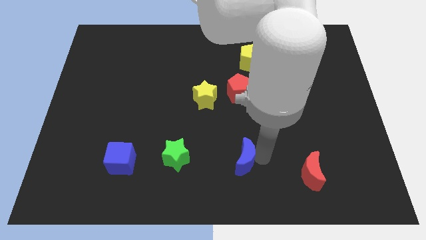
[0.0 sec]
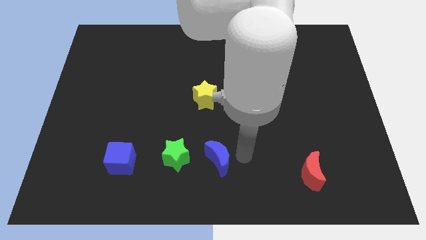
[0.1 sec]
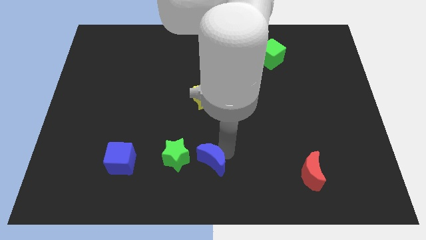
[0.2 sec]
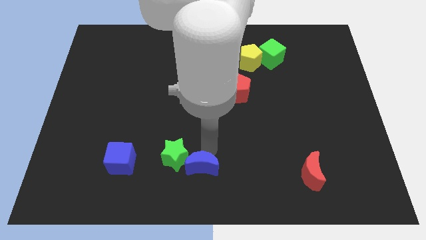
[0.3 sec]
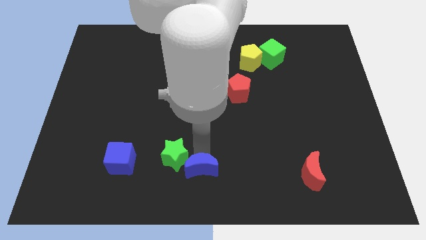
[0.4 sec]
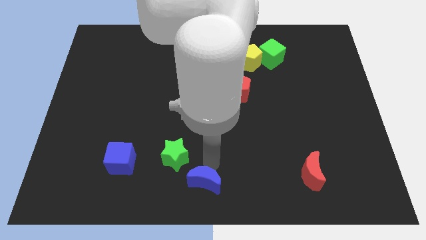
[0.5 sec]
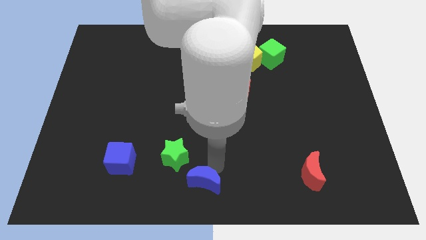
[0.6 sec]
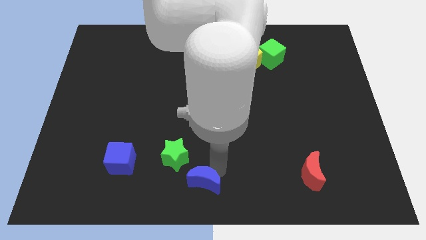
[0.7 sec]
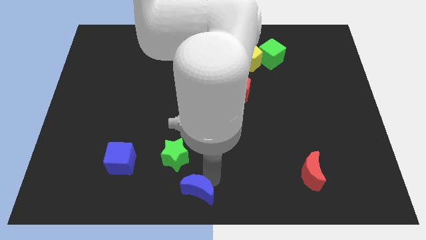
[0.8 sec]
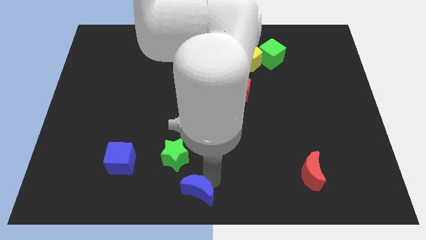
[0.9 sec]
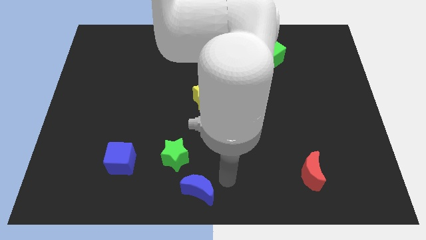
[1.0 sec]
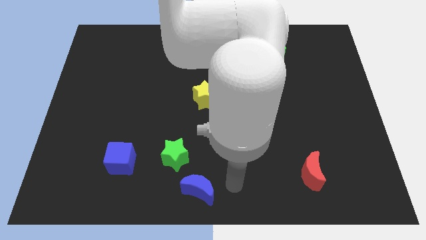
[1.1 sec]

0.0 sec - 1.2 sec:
move the blue moon to the bottom right side of the green star

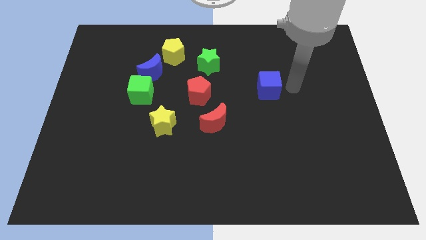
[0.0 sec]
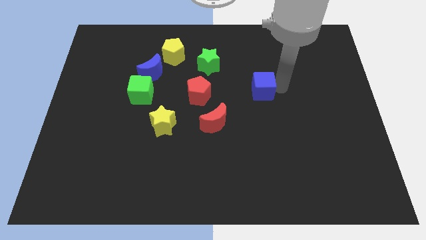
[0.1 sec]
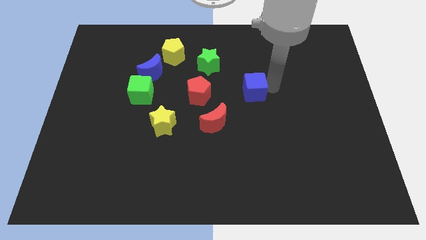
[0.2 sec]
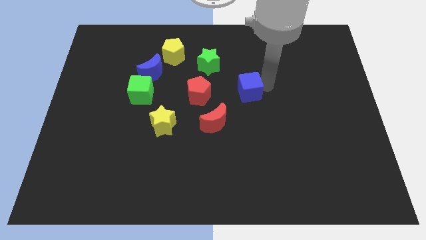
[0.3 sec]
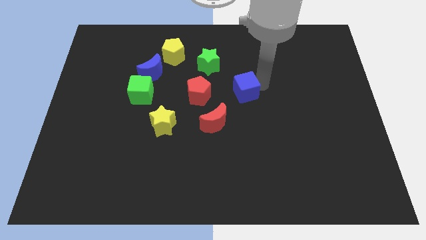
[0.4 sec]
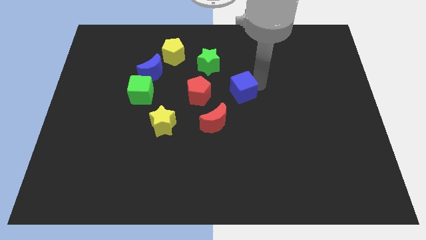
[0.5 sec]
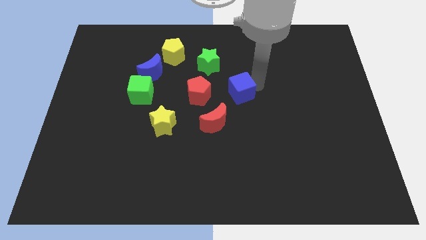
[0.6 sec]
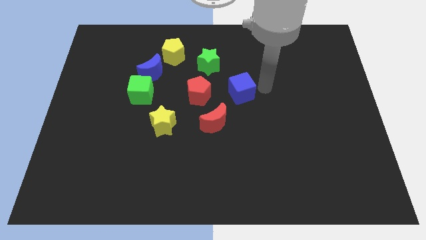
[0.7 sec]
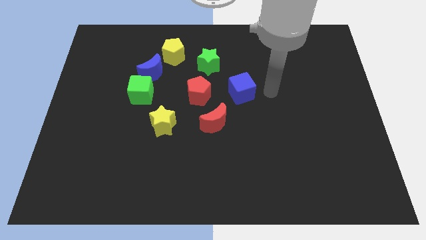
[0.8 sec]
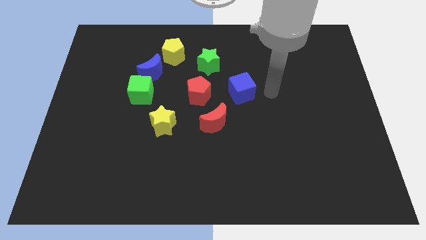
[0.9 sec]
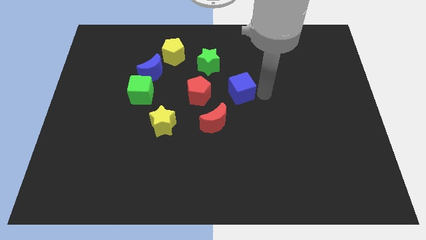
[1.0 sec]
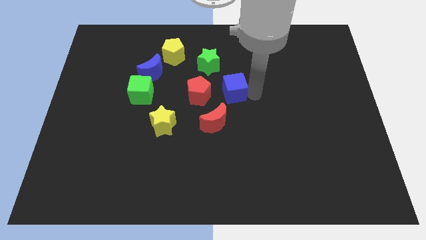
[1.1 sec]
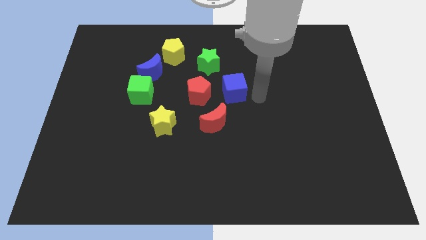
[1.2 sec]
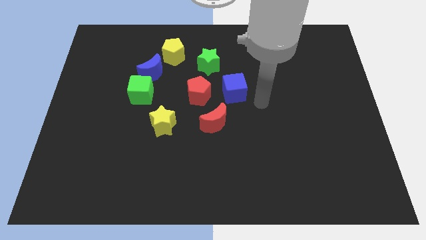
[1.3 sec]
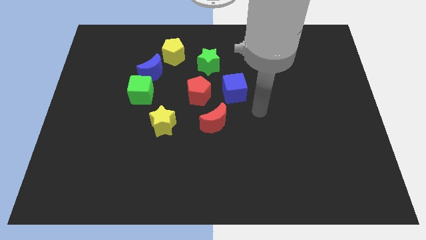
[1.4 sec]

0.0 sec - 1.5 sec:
place the blue cube right to the red pentagon

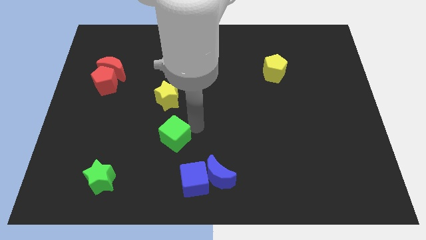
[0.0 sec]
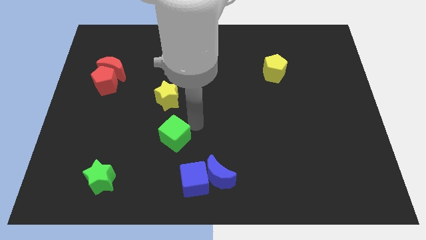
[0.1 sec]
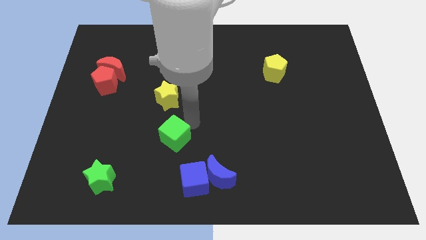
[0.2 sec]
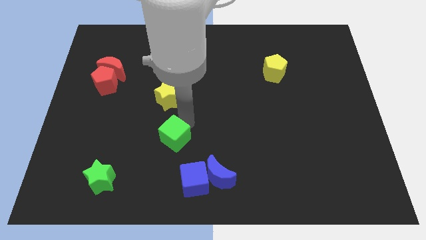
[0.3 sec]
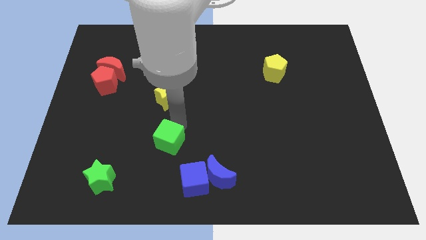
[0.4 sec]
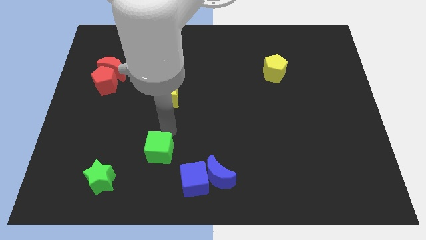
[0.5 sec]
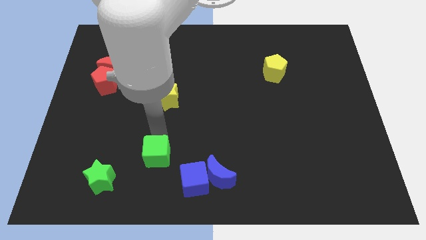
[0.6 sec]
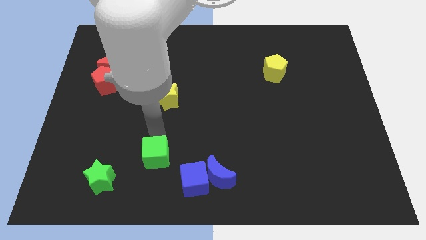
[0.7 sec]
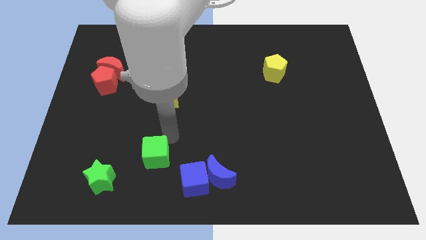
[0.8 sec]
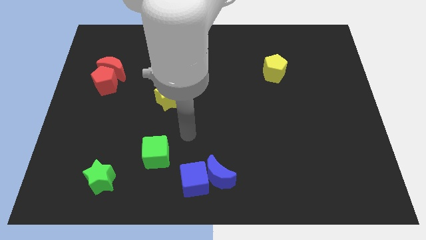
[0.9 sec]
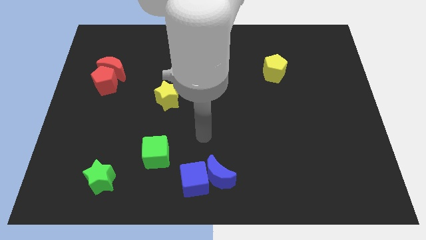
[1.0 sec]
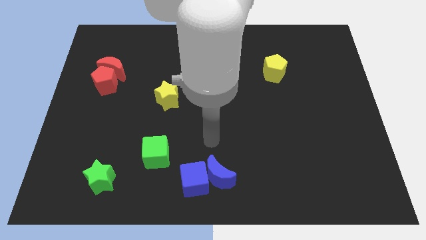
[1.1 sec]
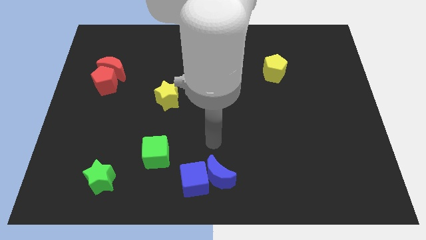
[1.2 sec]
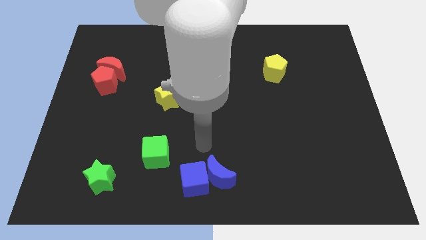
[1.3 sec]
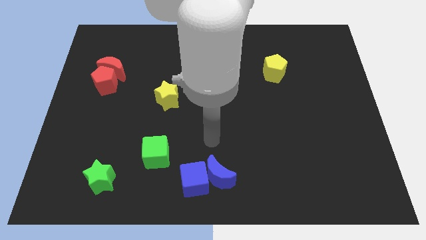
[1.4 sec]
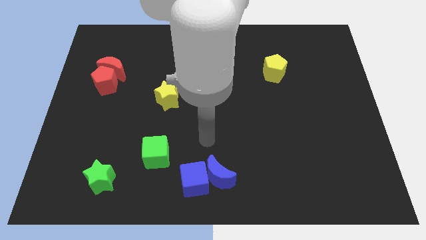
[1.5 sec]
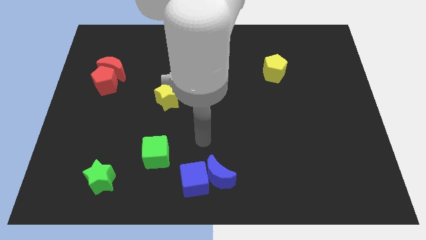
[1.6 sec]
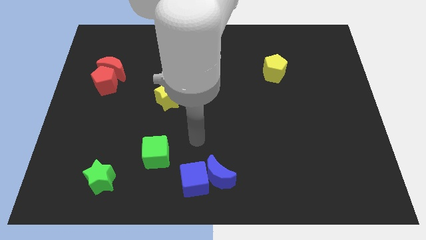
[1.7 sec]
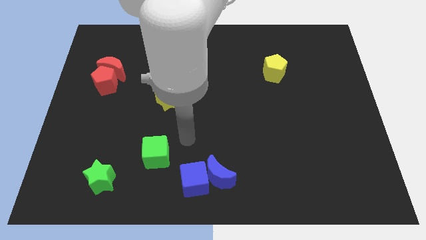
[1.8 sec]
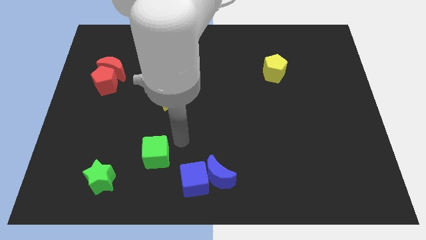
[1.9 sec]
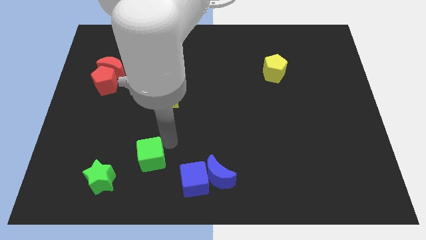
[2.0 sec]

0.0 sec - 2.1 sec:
slide the green cube to the top right of green star

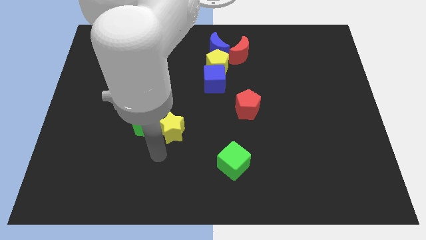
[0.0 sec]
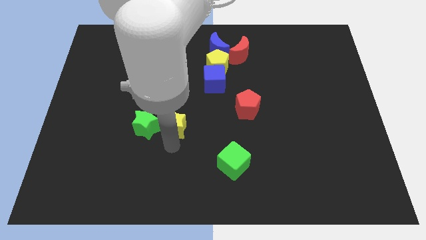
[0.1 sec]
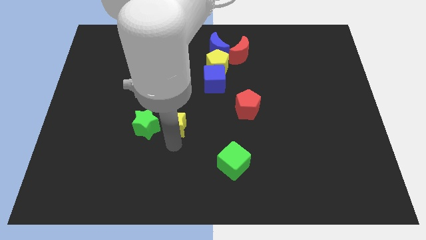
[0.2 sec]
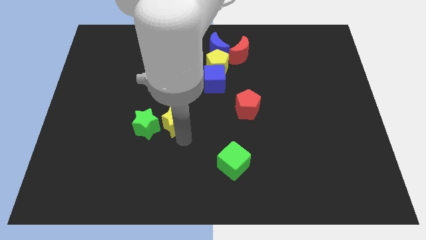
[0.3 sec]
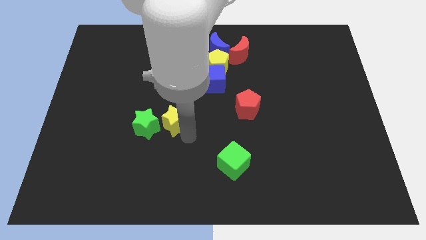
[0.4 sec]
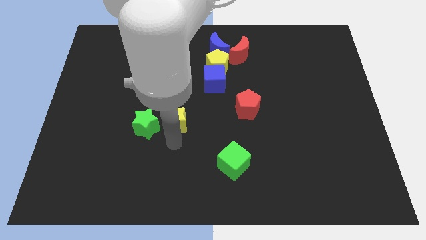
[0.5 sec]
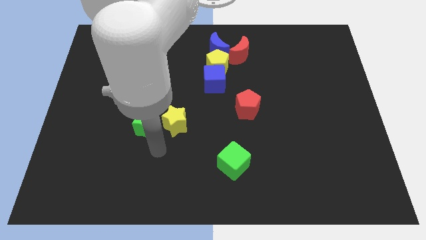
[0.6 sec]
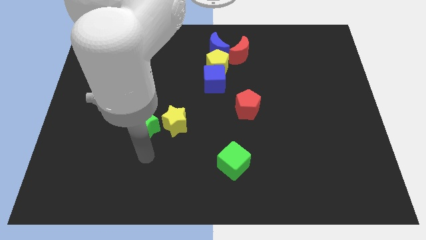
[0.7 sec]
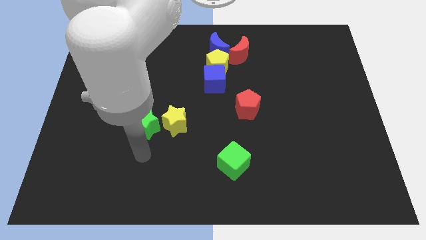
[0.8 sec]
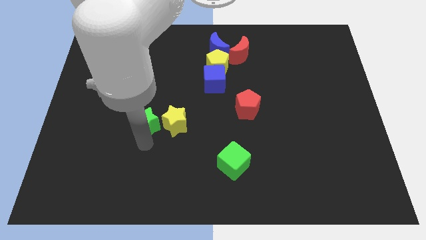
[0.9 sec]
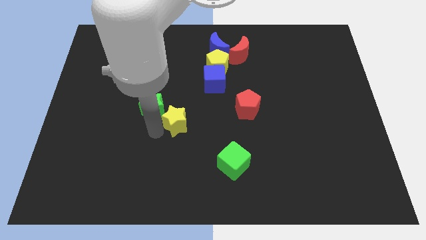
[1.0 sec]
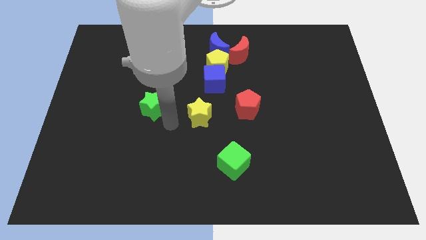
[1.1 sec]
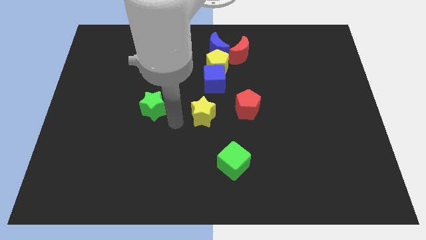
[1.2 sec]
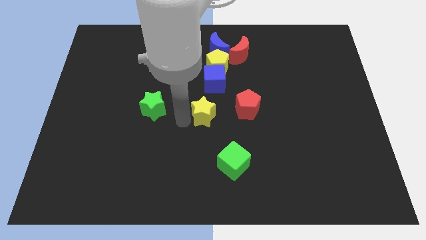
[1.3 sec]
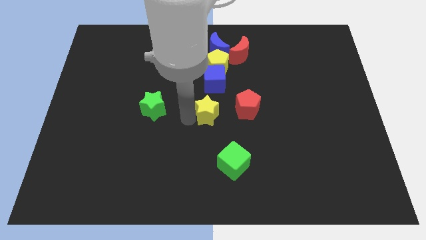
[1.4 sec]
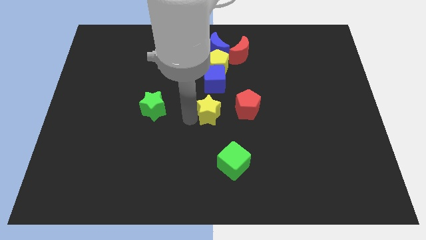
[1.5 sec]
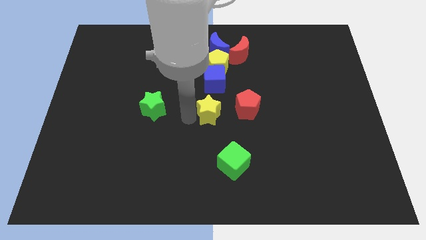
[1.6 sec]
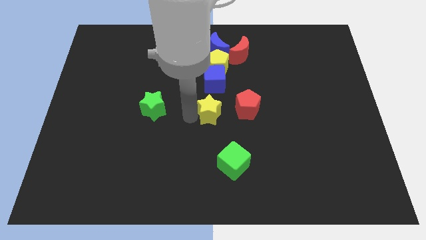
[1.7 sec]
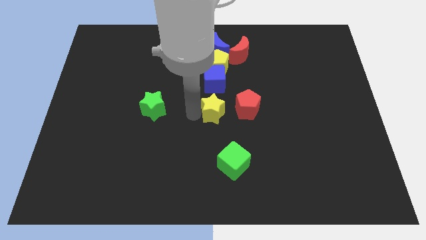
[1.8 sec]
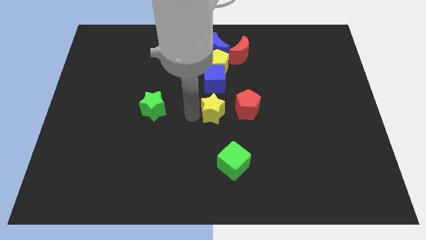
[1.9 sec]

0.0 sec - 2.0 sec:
separate the green and yellow stars

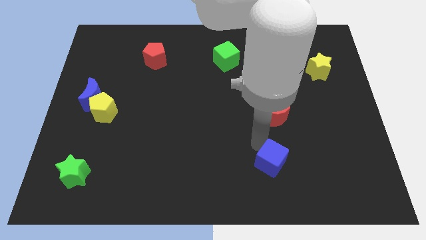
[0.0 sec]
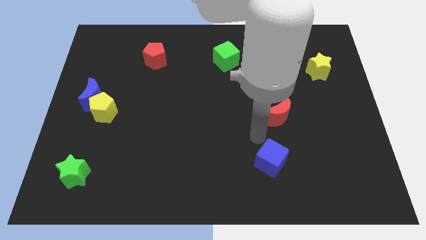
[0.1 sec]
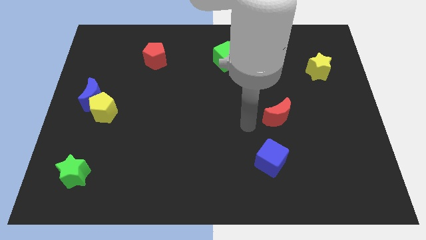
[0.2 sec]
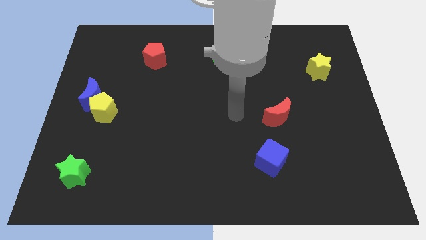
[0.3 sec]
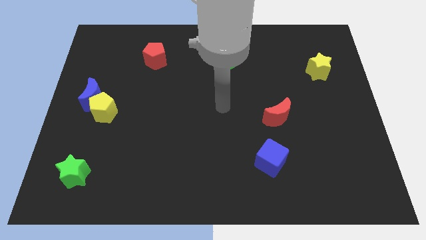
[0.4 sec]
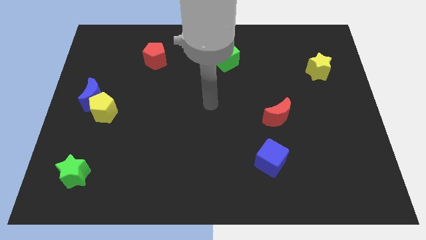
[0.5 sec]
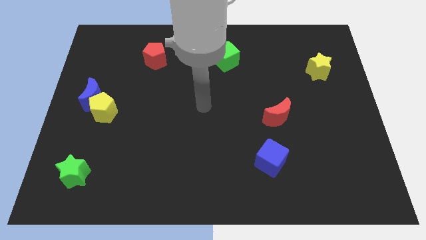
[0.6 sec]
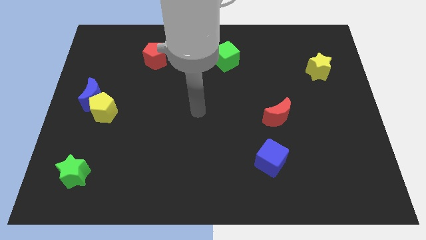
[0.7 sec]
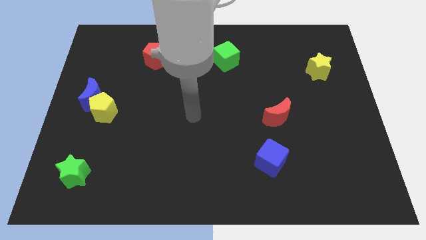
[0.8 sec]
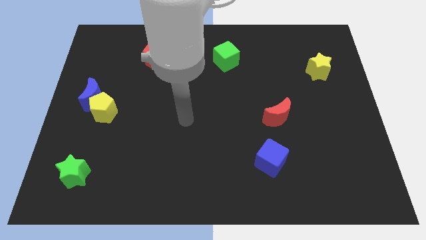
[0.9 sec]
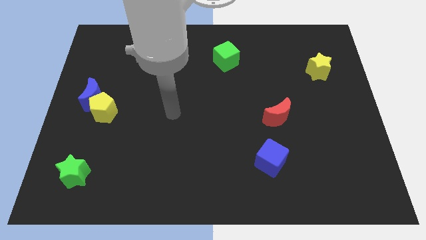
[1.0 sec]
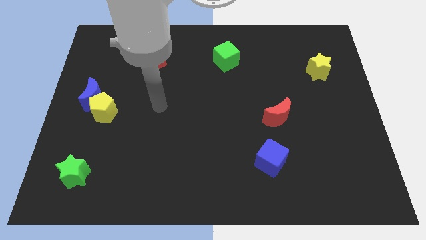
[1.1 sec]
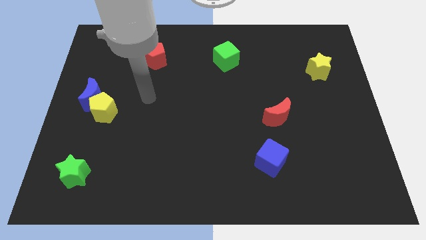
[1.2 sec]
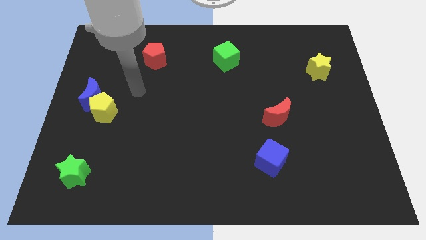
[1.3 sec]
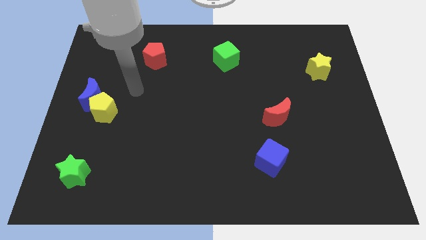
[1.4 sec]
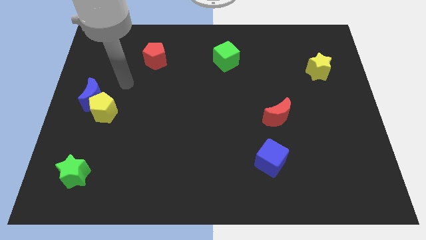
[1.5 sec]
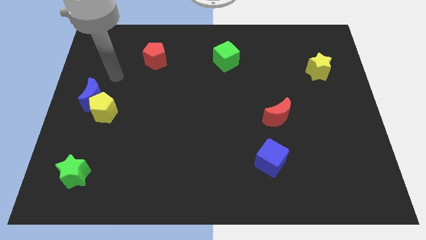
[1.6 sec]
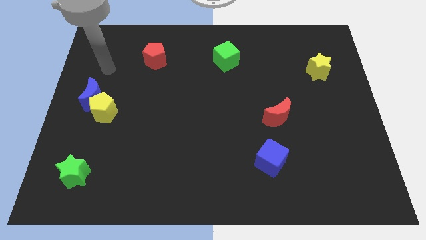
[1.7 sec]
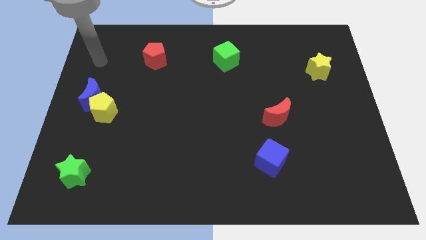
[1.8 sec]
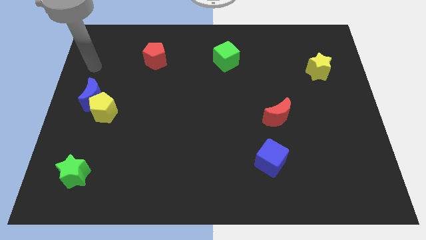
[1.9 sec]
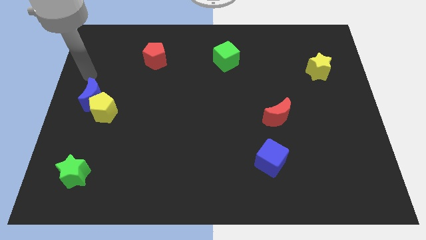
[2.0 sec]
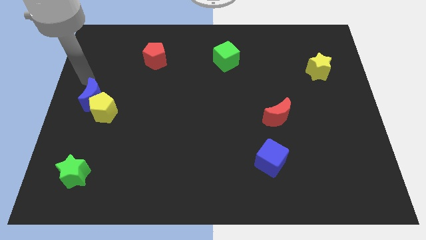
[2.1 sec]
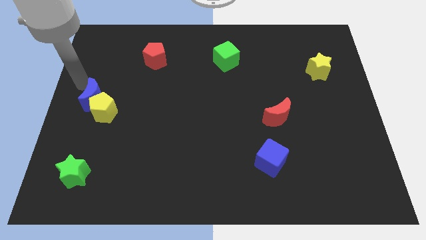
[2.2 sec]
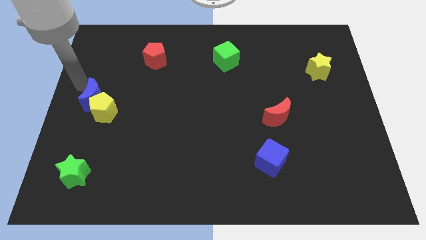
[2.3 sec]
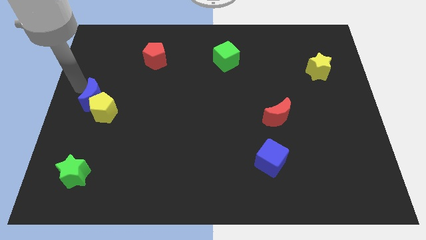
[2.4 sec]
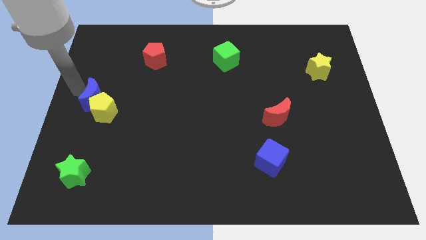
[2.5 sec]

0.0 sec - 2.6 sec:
point your arm at the left of the blue crescent
